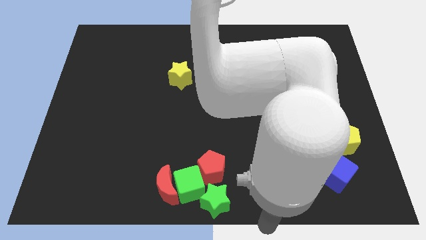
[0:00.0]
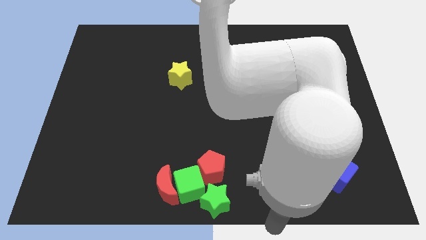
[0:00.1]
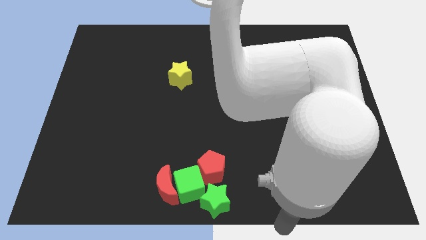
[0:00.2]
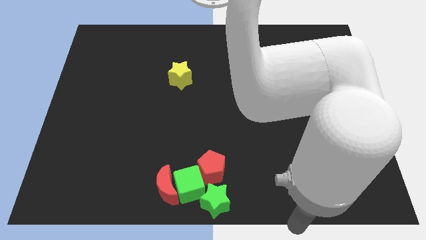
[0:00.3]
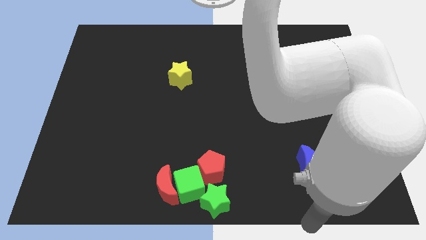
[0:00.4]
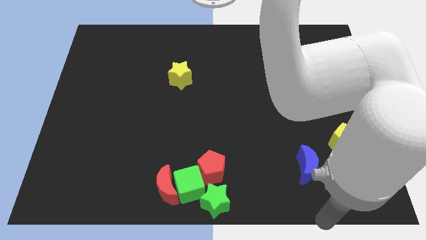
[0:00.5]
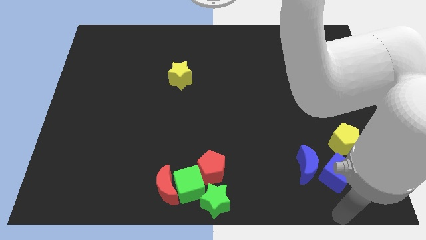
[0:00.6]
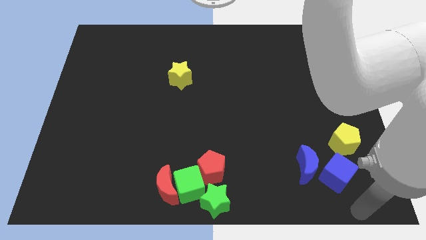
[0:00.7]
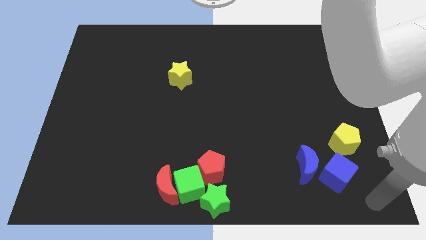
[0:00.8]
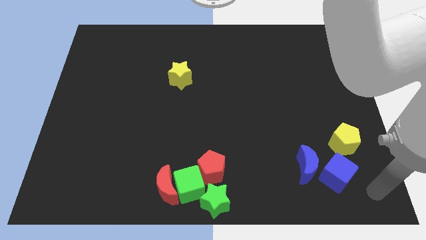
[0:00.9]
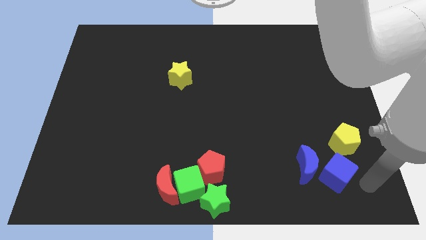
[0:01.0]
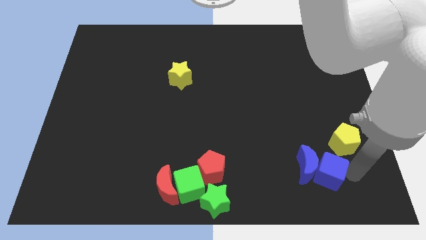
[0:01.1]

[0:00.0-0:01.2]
point your arm at the right of the blue cube

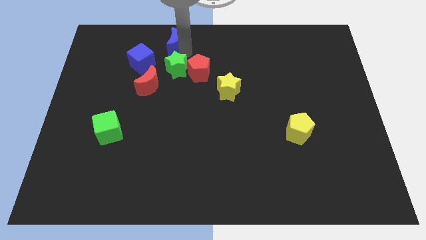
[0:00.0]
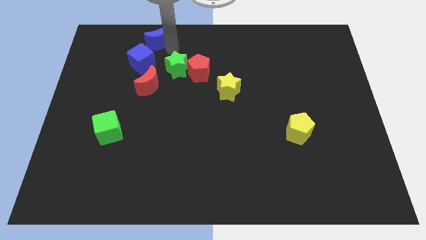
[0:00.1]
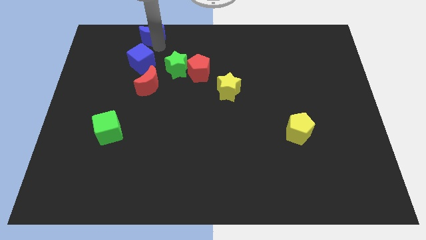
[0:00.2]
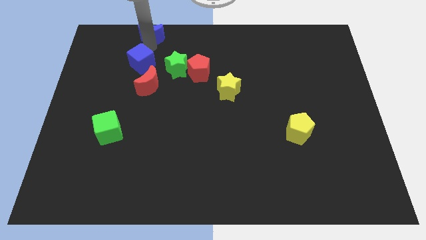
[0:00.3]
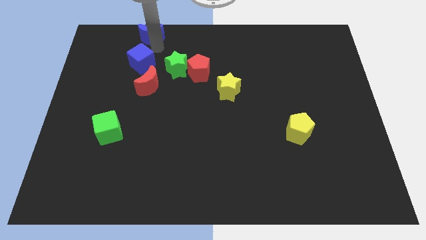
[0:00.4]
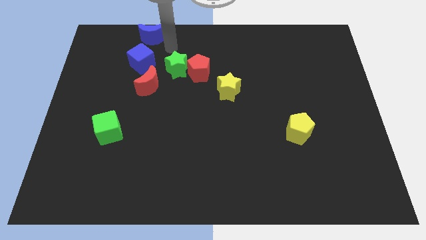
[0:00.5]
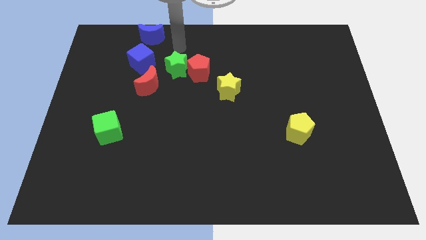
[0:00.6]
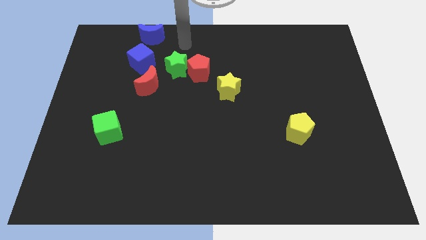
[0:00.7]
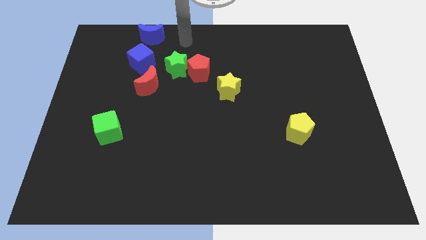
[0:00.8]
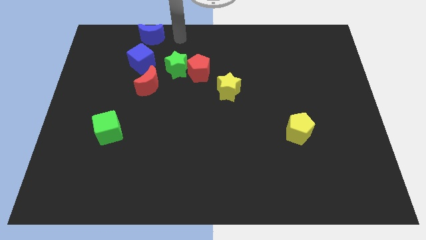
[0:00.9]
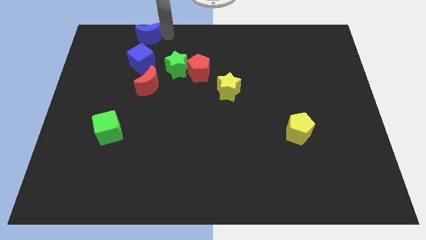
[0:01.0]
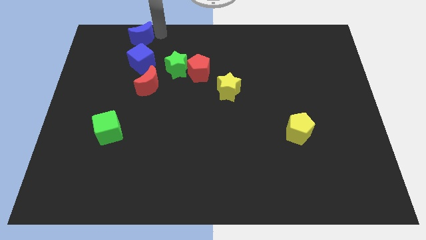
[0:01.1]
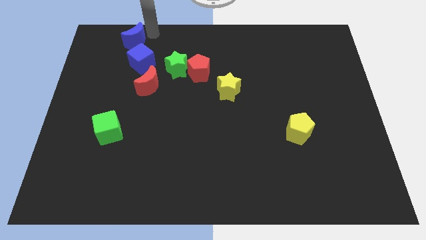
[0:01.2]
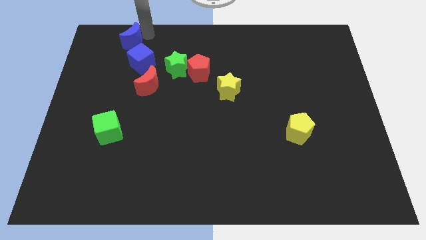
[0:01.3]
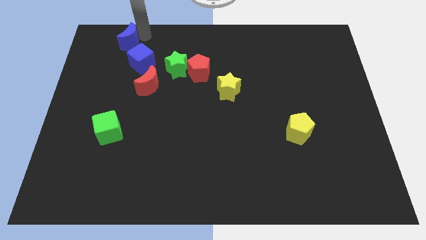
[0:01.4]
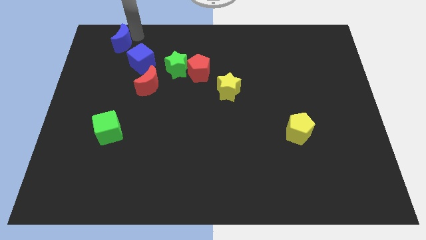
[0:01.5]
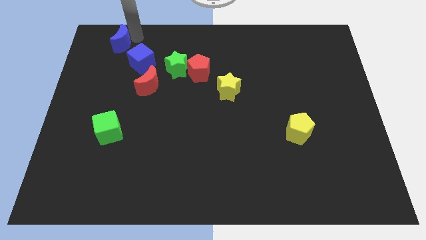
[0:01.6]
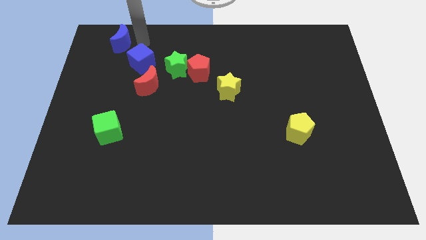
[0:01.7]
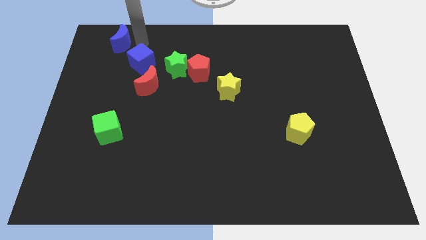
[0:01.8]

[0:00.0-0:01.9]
slide the blue moon diagonal top left to blue cube

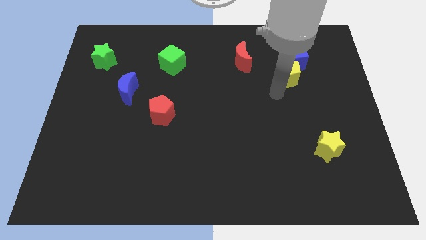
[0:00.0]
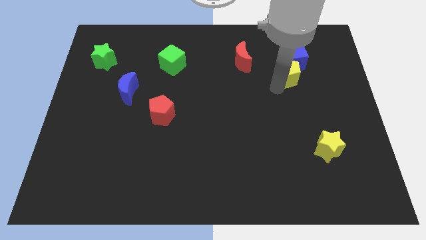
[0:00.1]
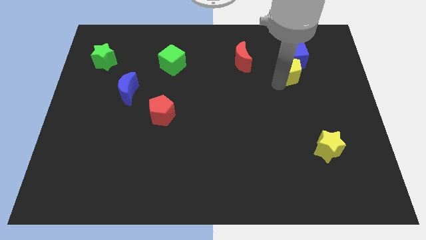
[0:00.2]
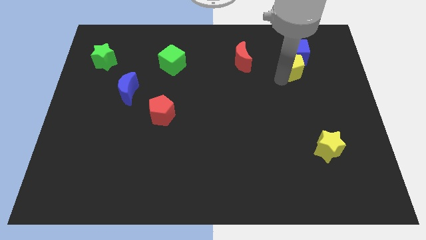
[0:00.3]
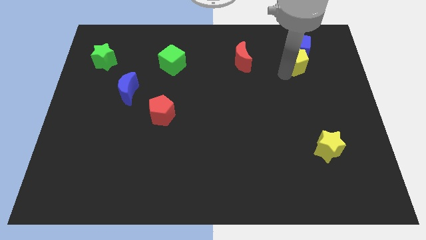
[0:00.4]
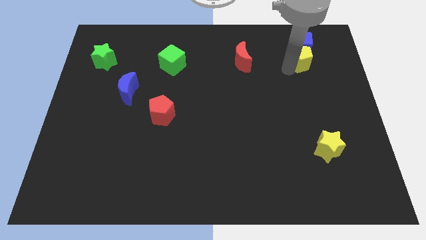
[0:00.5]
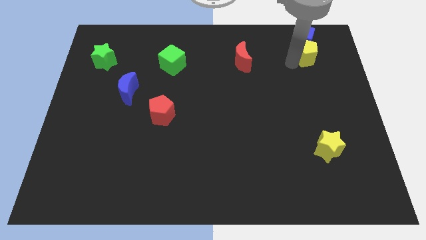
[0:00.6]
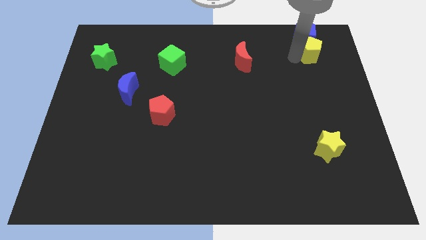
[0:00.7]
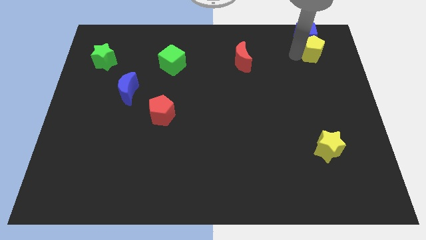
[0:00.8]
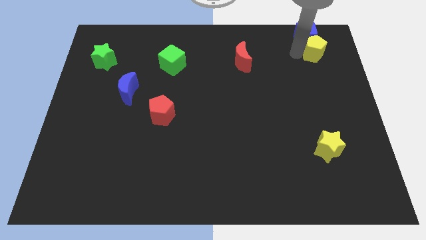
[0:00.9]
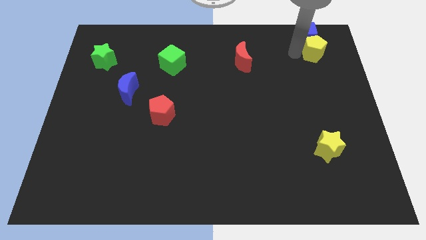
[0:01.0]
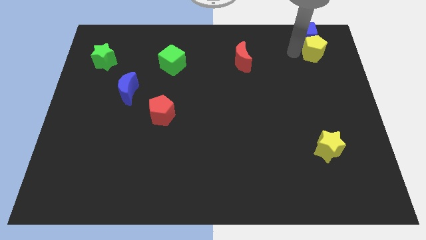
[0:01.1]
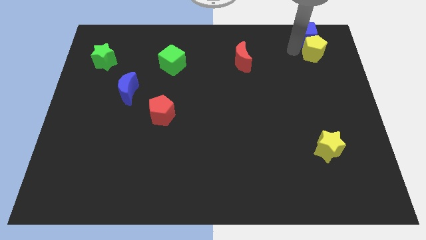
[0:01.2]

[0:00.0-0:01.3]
push the blue cube with the yellow pentagon

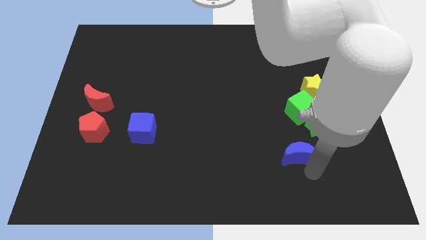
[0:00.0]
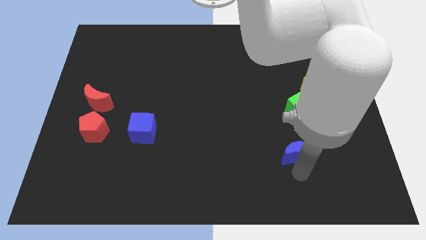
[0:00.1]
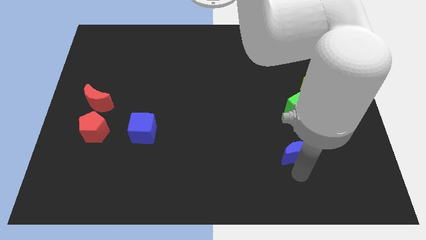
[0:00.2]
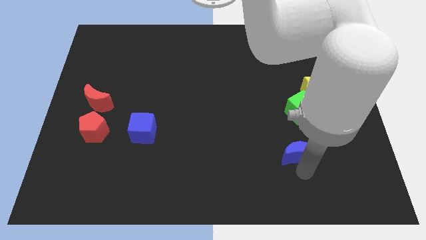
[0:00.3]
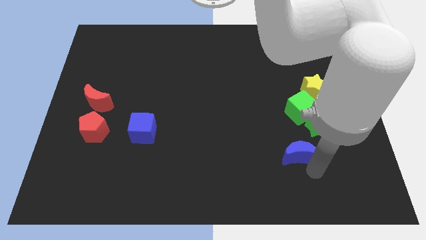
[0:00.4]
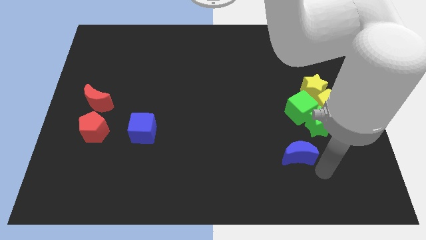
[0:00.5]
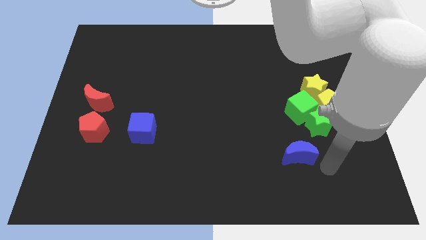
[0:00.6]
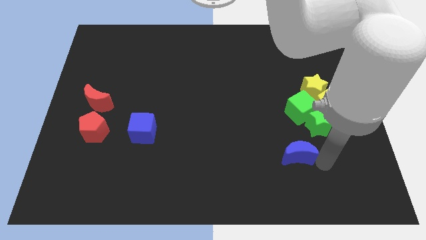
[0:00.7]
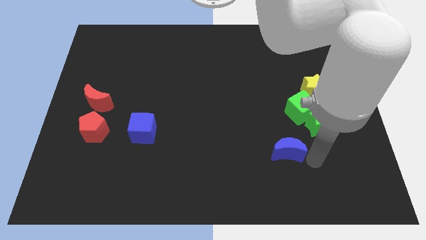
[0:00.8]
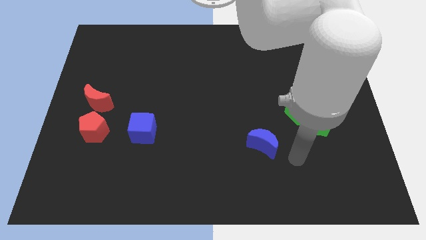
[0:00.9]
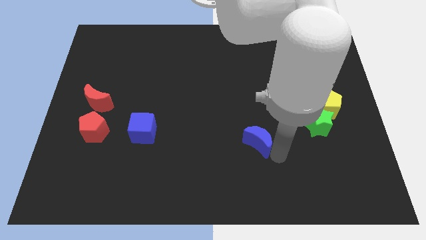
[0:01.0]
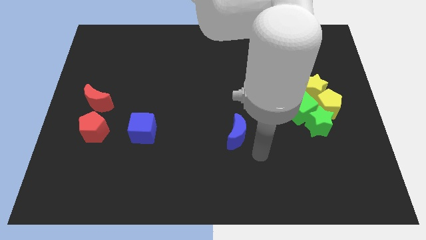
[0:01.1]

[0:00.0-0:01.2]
push the blue crescent parallel to the blue cube

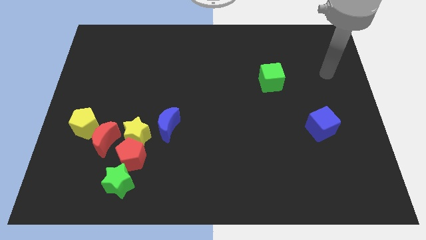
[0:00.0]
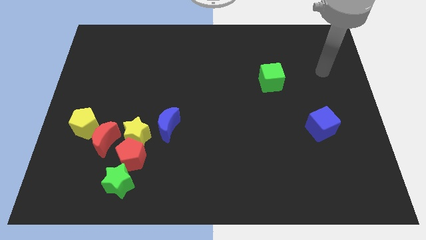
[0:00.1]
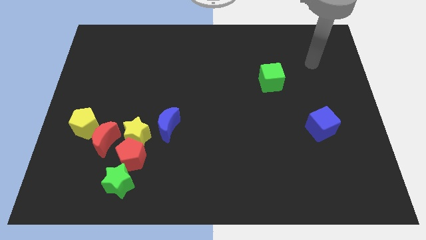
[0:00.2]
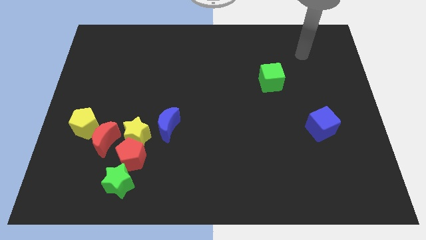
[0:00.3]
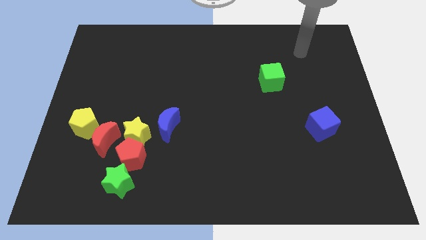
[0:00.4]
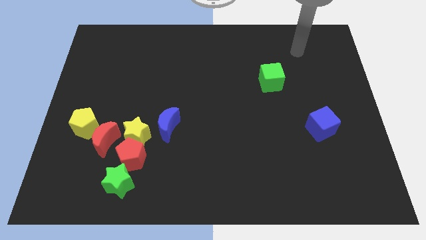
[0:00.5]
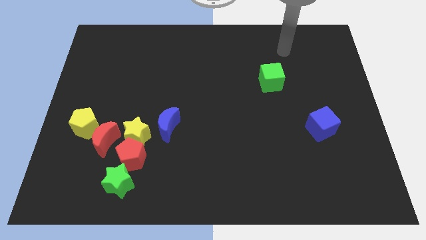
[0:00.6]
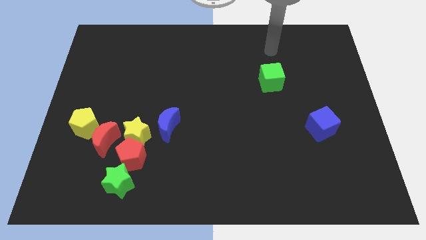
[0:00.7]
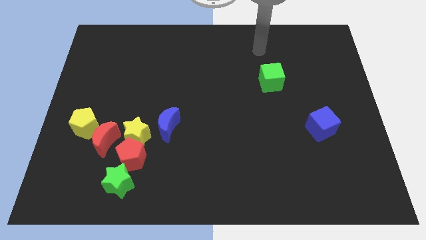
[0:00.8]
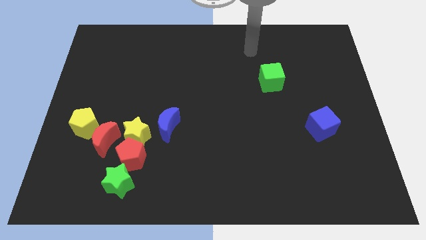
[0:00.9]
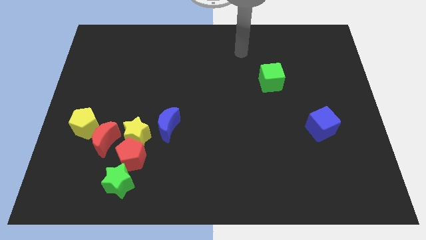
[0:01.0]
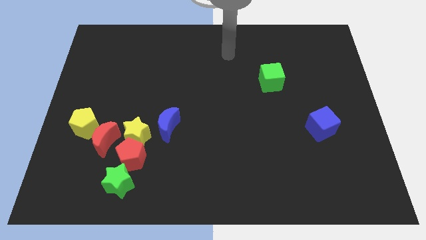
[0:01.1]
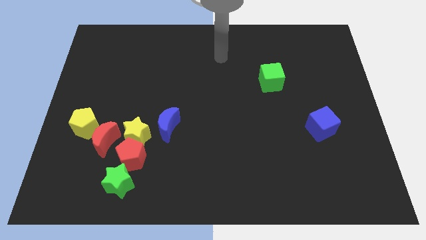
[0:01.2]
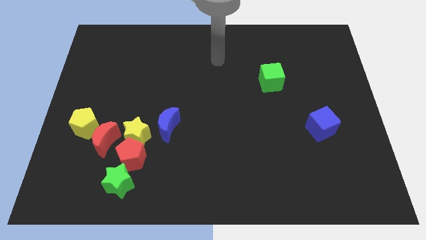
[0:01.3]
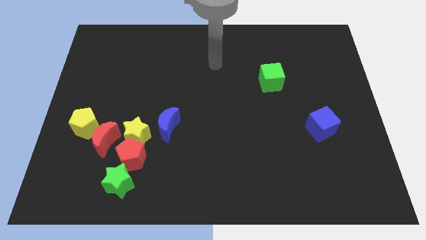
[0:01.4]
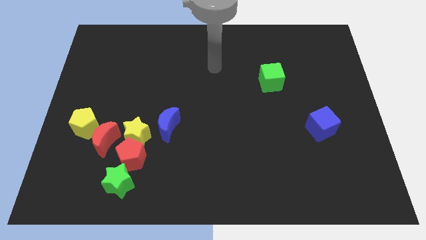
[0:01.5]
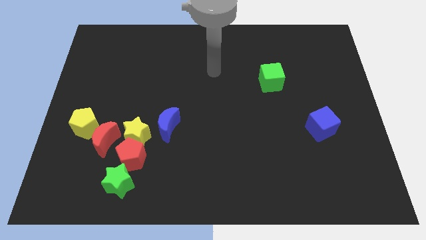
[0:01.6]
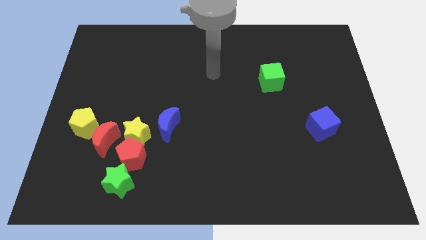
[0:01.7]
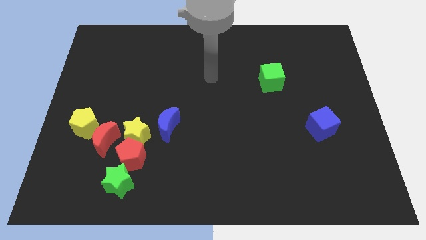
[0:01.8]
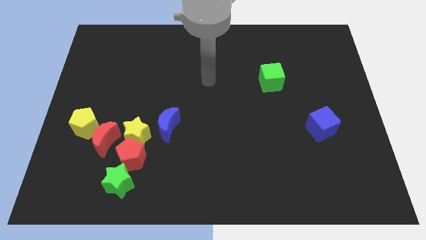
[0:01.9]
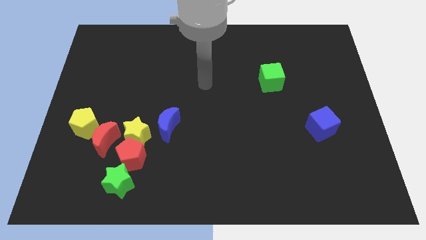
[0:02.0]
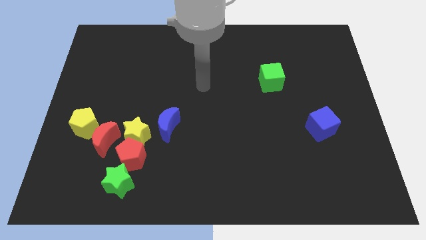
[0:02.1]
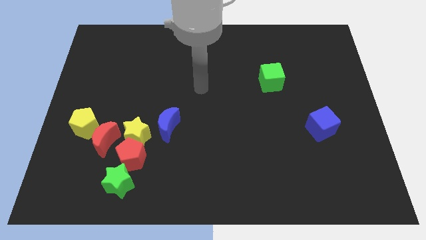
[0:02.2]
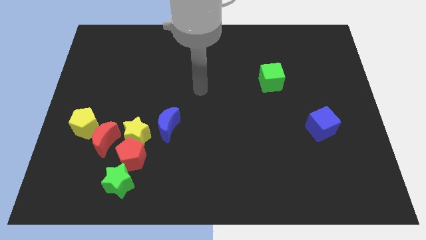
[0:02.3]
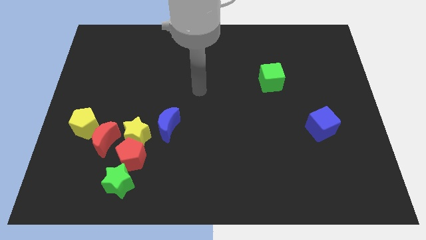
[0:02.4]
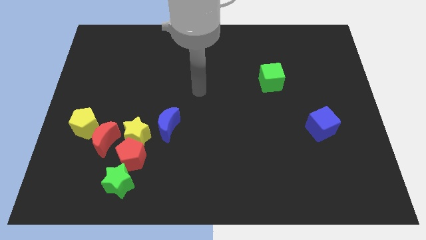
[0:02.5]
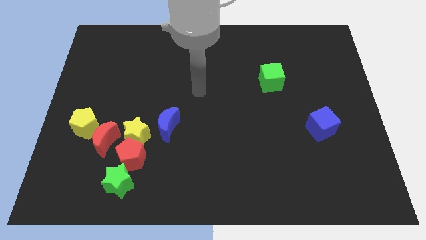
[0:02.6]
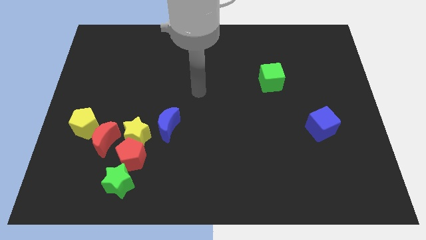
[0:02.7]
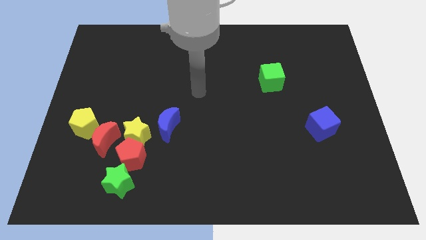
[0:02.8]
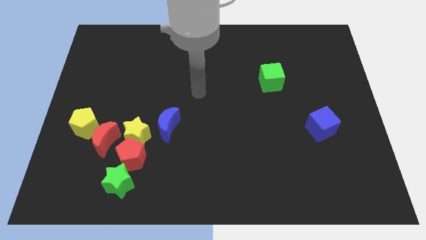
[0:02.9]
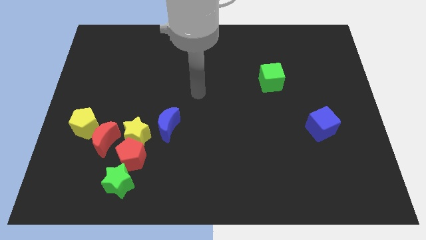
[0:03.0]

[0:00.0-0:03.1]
point the arm at the center of the board

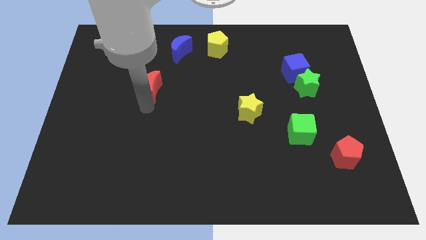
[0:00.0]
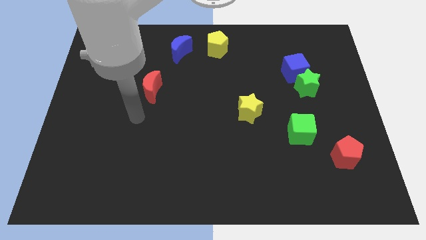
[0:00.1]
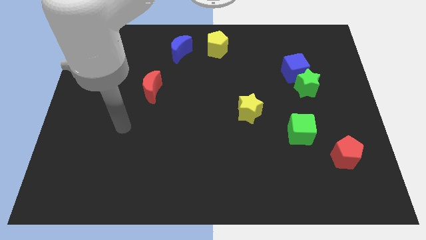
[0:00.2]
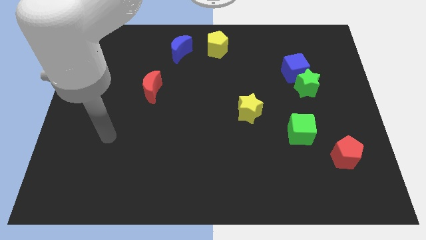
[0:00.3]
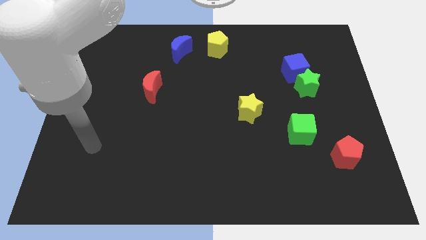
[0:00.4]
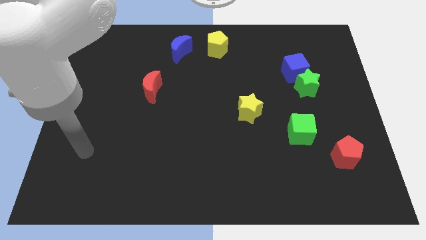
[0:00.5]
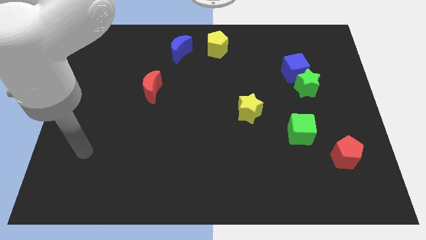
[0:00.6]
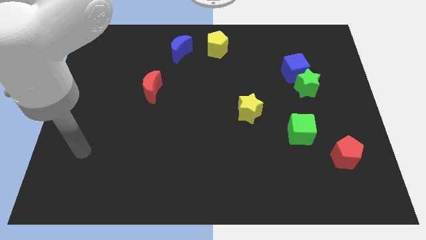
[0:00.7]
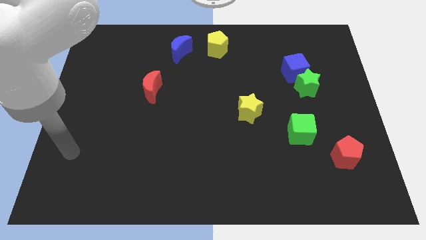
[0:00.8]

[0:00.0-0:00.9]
move your arm towards the bottom left side of the board
